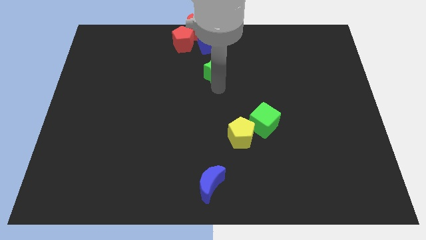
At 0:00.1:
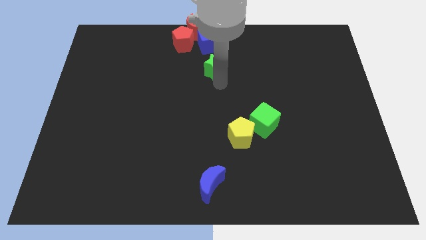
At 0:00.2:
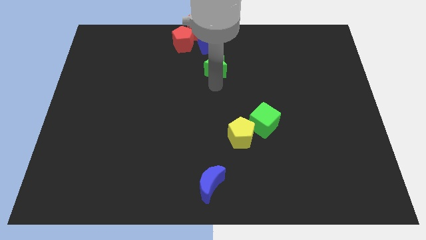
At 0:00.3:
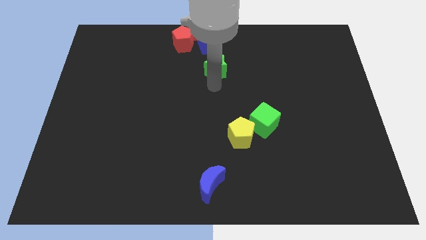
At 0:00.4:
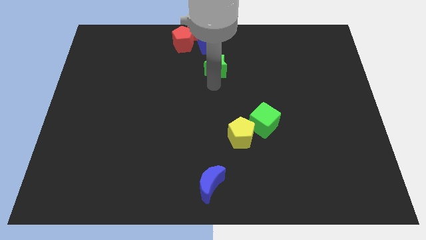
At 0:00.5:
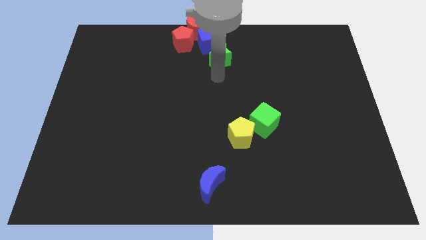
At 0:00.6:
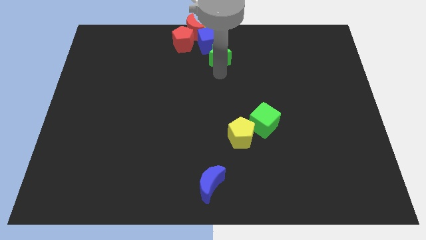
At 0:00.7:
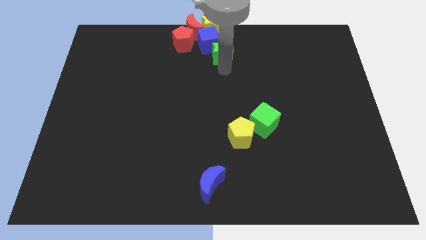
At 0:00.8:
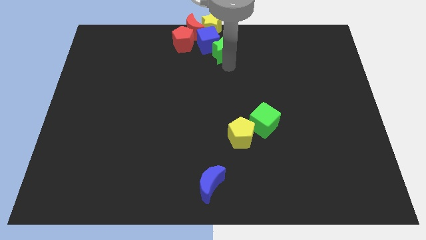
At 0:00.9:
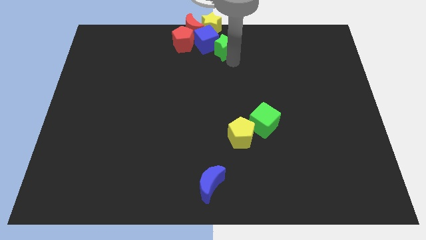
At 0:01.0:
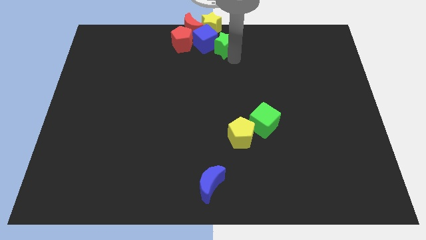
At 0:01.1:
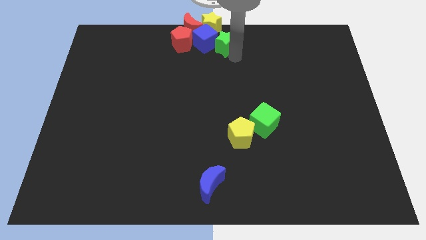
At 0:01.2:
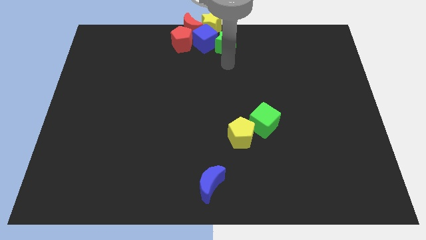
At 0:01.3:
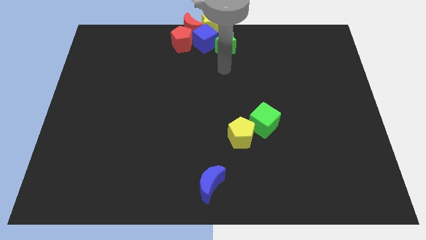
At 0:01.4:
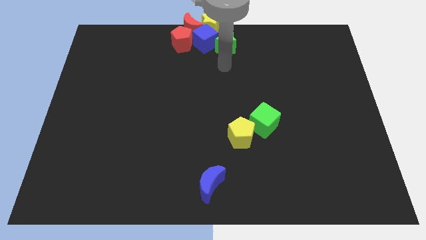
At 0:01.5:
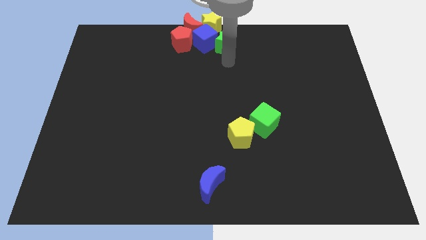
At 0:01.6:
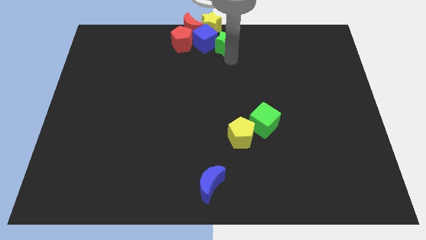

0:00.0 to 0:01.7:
put the green star on the right side of the blue cube

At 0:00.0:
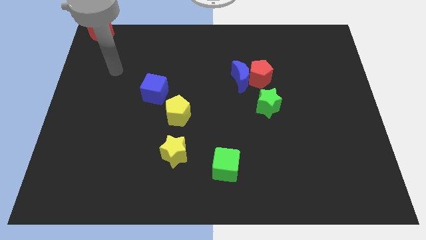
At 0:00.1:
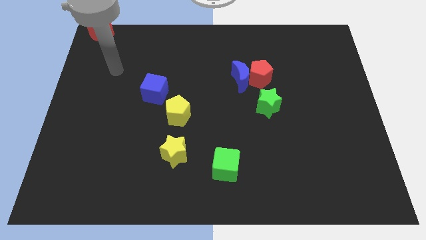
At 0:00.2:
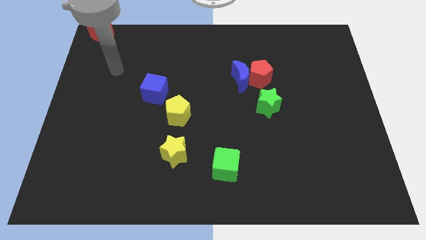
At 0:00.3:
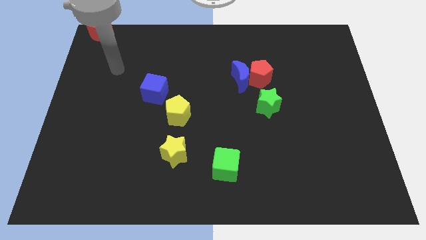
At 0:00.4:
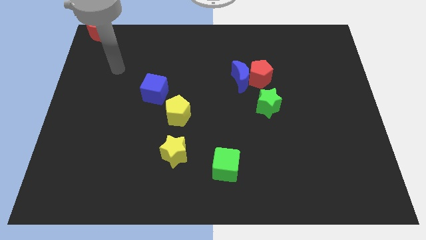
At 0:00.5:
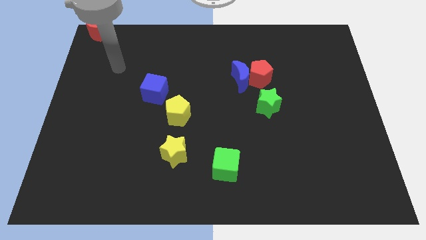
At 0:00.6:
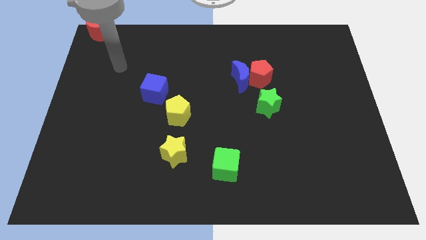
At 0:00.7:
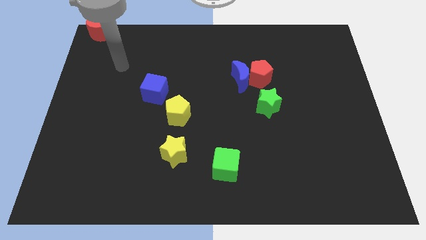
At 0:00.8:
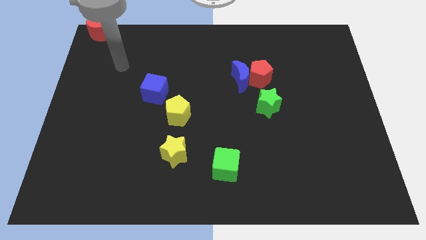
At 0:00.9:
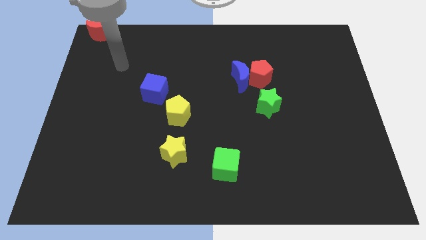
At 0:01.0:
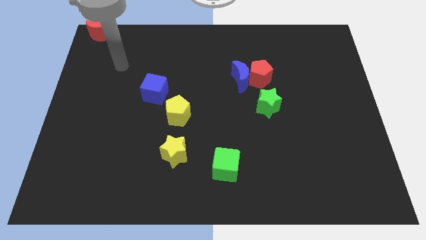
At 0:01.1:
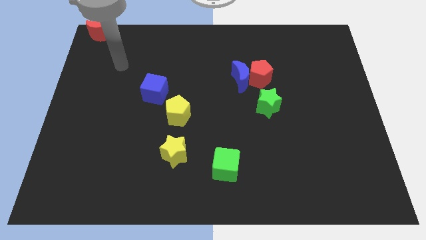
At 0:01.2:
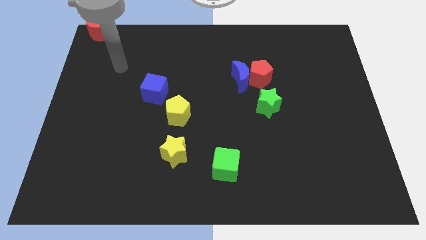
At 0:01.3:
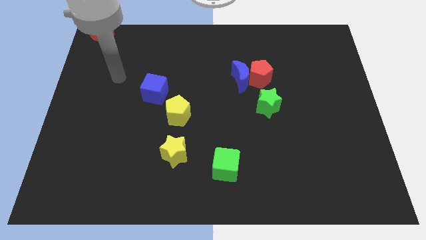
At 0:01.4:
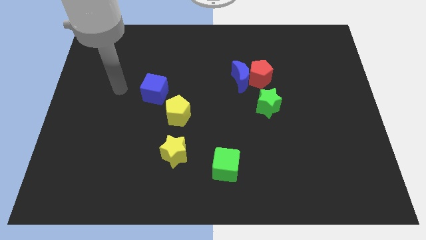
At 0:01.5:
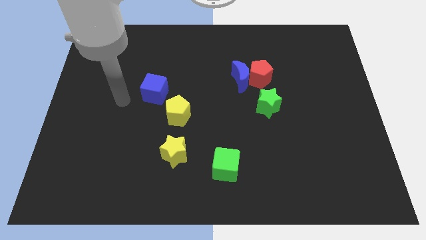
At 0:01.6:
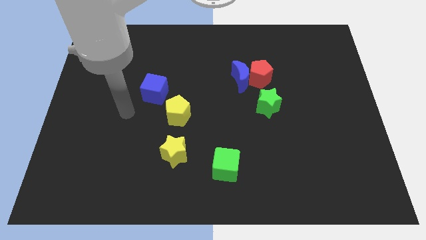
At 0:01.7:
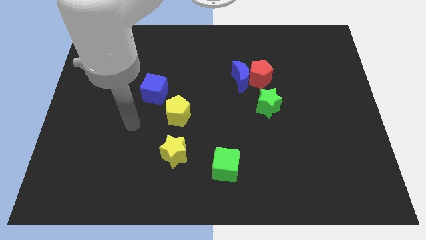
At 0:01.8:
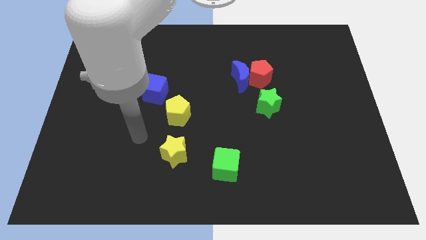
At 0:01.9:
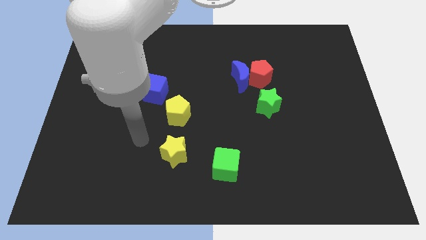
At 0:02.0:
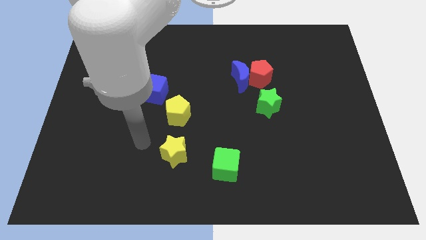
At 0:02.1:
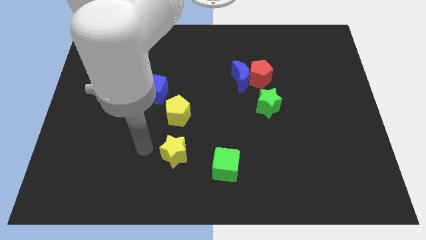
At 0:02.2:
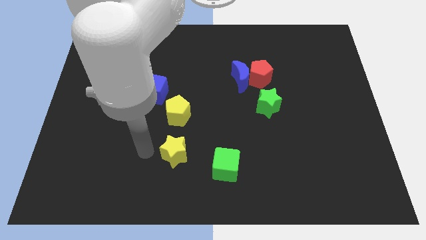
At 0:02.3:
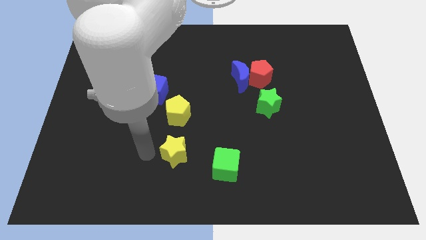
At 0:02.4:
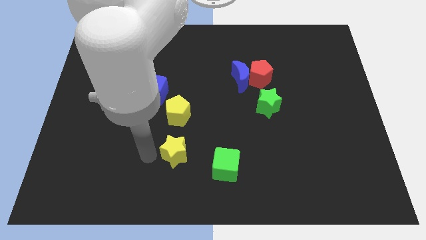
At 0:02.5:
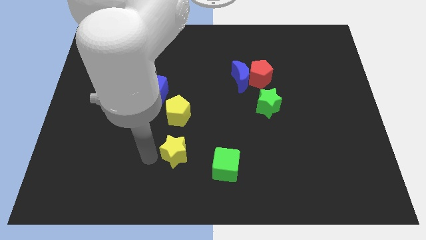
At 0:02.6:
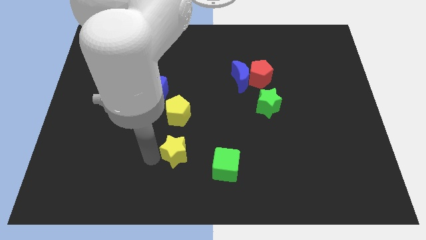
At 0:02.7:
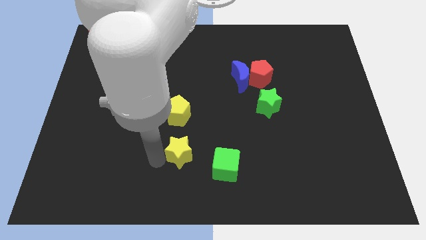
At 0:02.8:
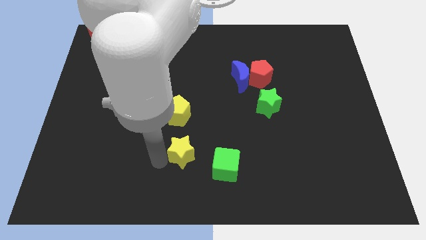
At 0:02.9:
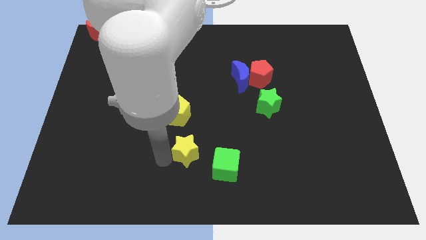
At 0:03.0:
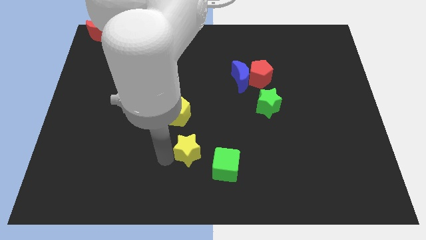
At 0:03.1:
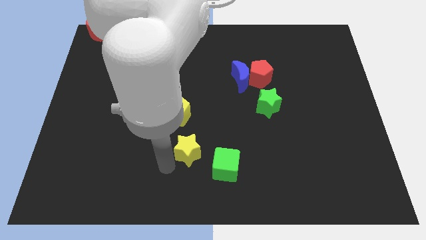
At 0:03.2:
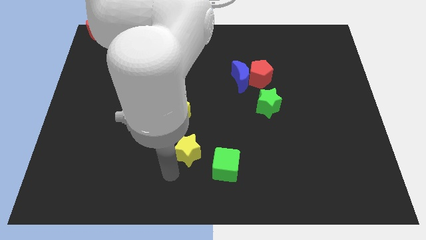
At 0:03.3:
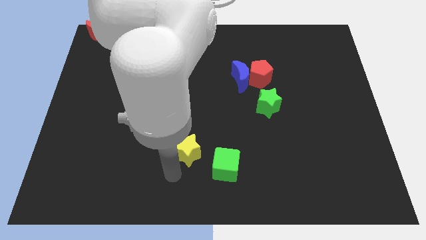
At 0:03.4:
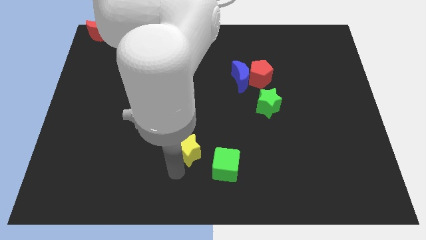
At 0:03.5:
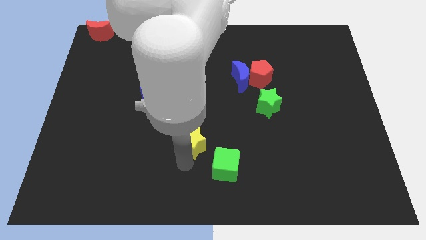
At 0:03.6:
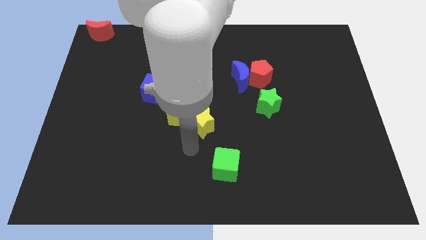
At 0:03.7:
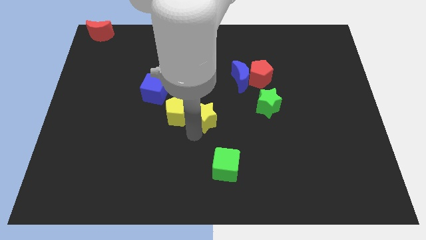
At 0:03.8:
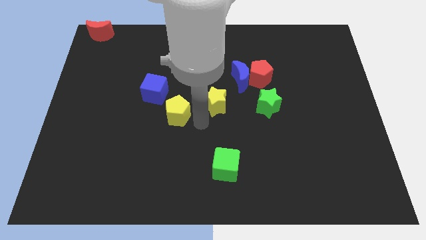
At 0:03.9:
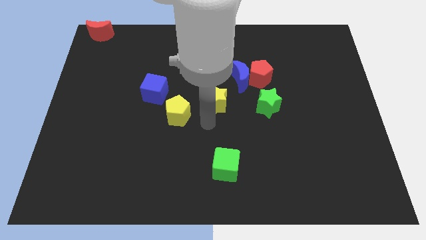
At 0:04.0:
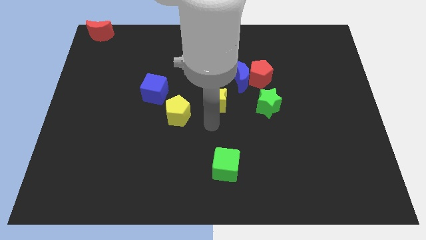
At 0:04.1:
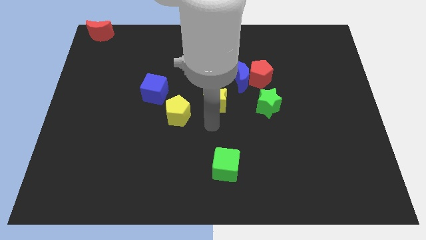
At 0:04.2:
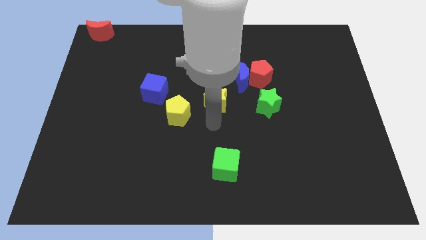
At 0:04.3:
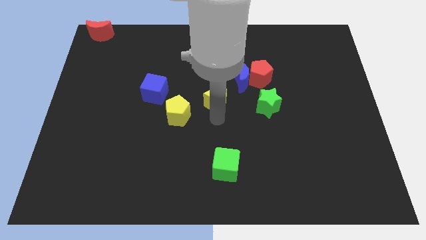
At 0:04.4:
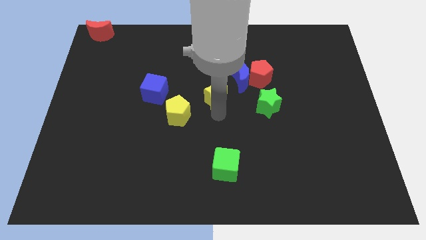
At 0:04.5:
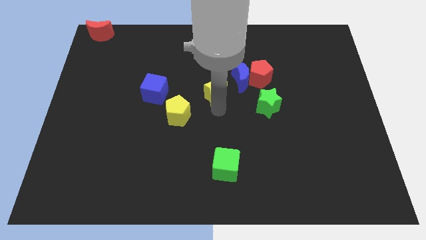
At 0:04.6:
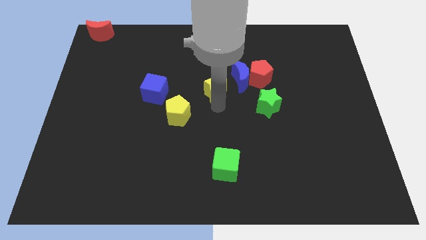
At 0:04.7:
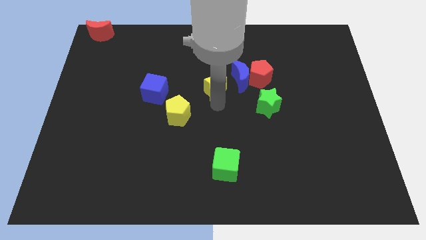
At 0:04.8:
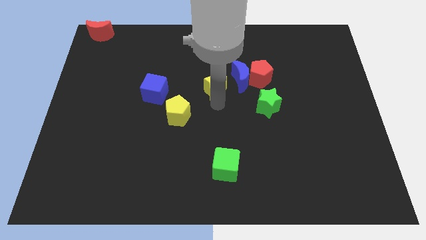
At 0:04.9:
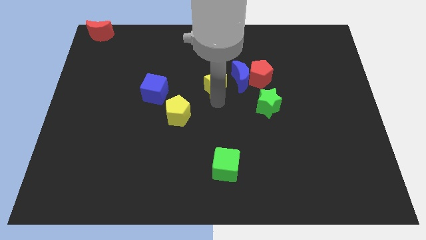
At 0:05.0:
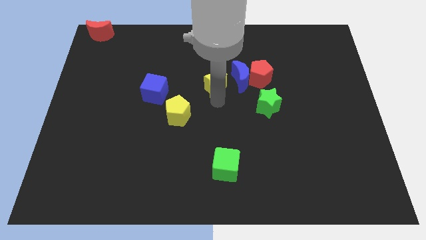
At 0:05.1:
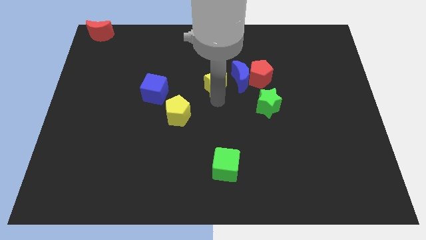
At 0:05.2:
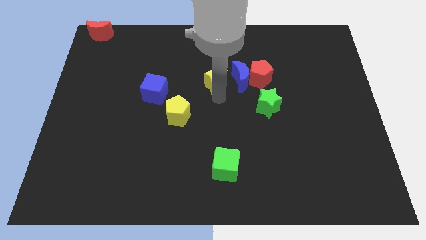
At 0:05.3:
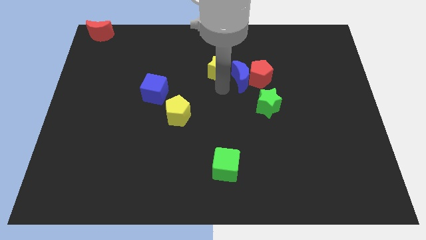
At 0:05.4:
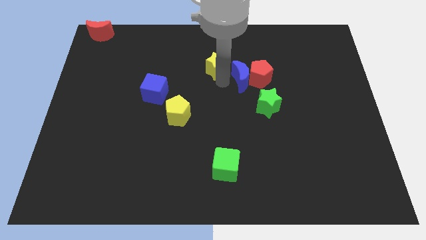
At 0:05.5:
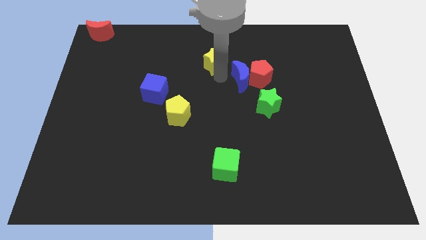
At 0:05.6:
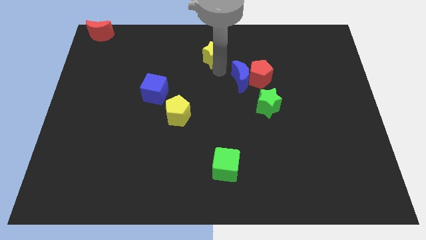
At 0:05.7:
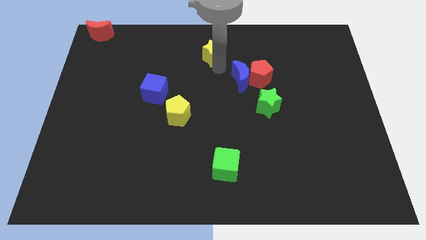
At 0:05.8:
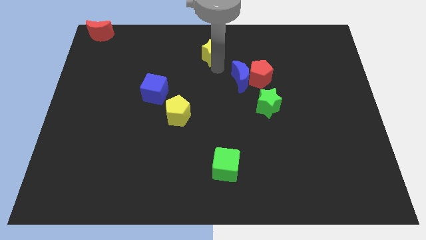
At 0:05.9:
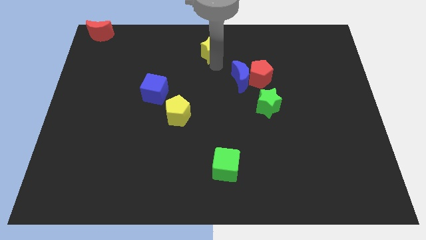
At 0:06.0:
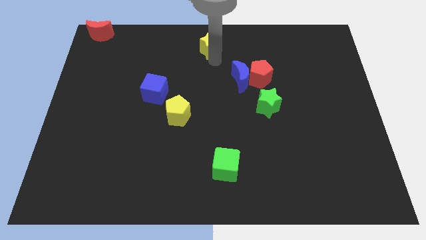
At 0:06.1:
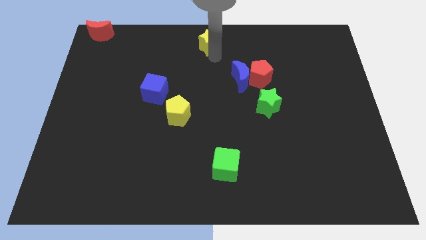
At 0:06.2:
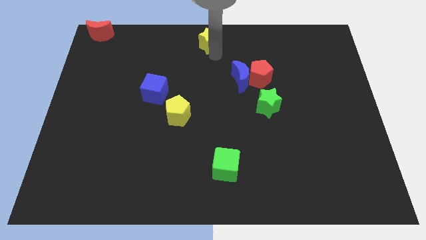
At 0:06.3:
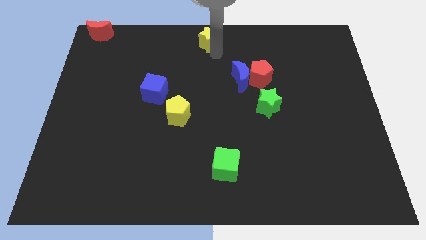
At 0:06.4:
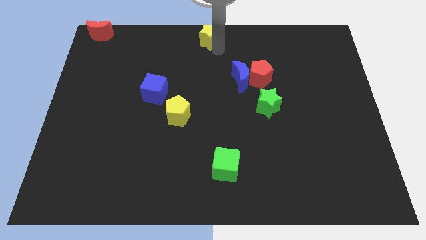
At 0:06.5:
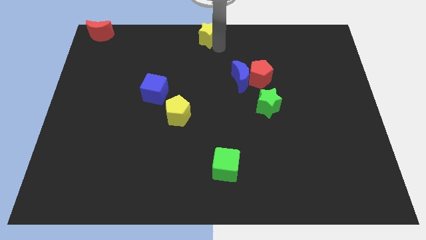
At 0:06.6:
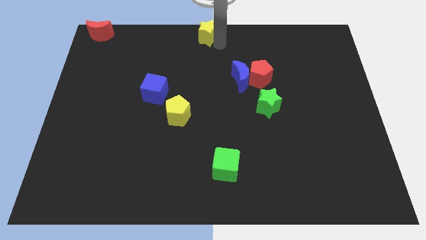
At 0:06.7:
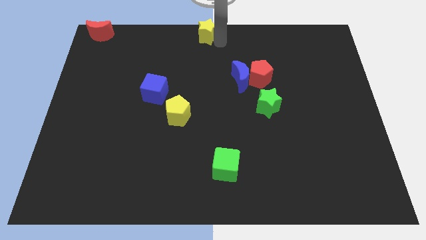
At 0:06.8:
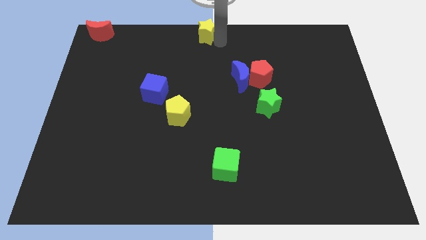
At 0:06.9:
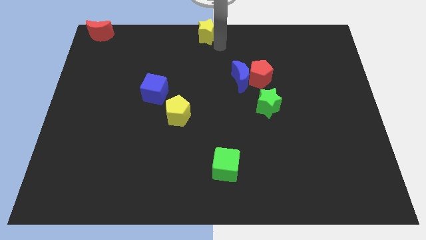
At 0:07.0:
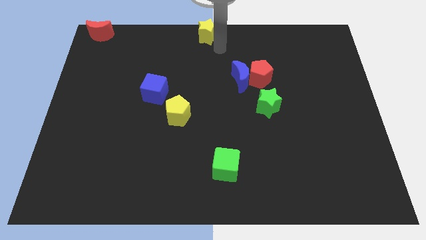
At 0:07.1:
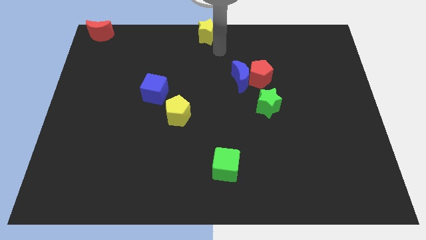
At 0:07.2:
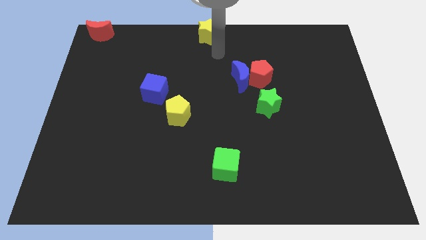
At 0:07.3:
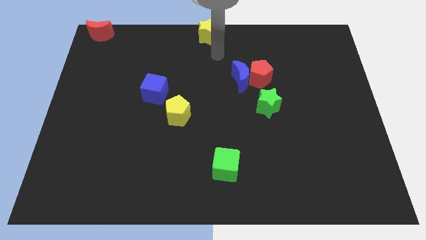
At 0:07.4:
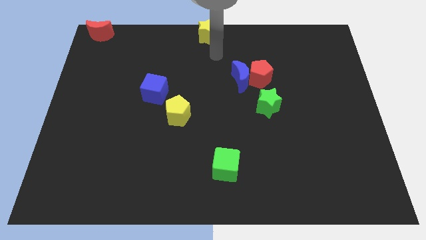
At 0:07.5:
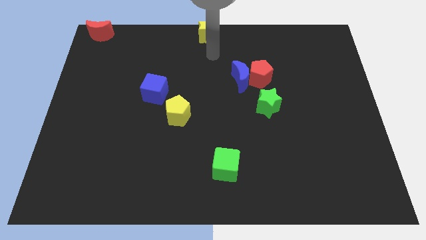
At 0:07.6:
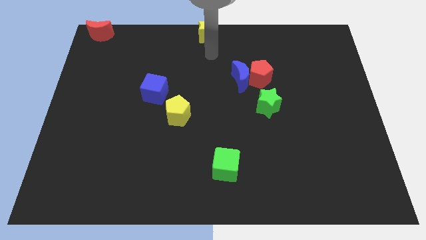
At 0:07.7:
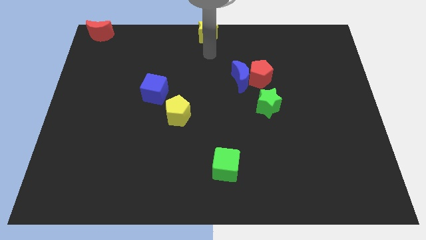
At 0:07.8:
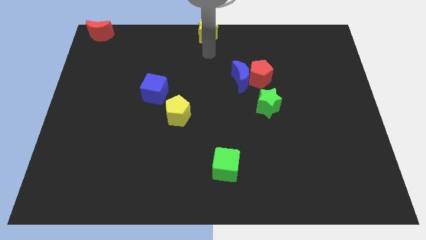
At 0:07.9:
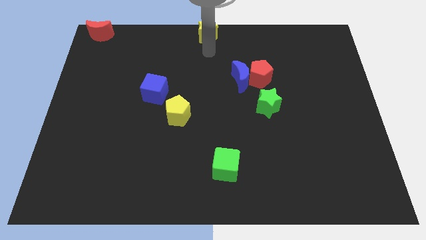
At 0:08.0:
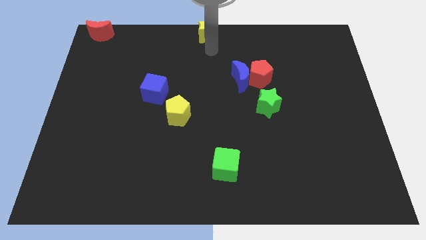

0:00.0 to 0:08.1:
place the yellow star at the top center
